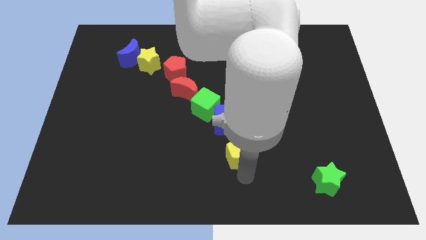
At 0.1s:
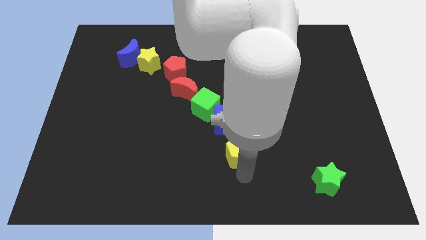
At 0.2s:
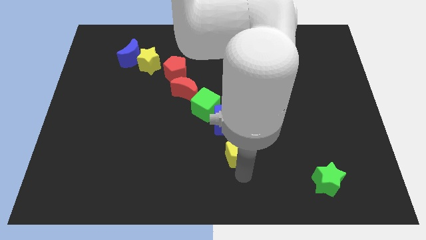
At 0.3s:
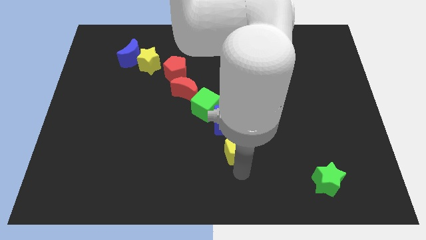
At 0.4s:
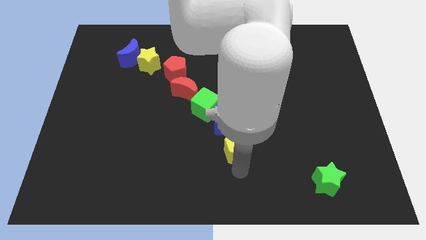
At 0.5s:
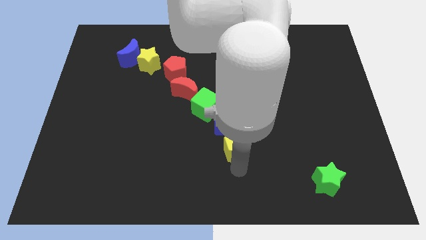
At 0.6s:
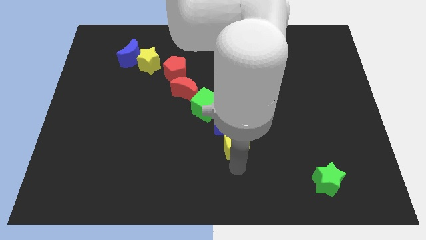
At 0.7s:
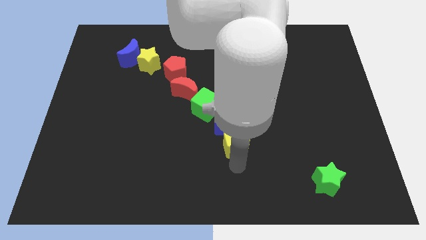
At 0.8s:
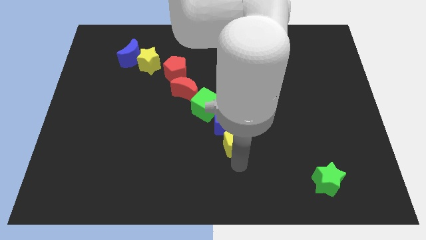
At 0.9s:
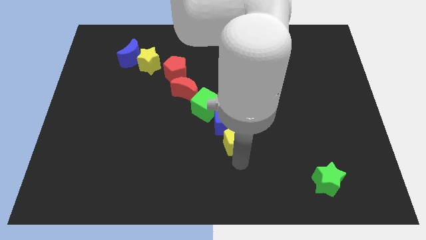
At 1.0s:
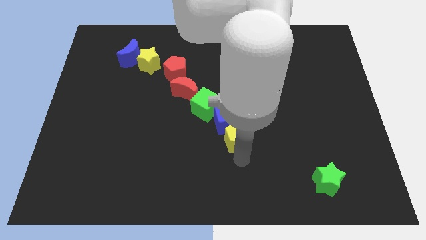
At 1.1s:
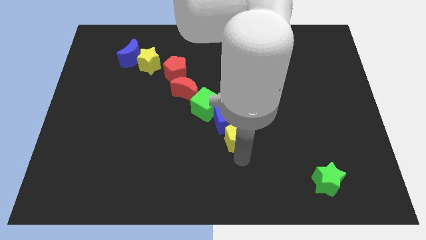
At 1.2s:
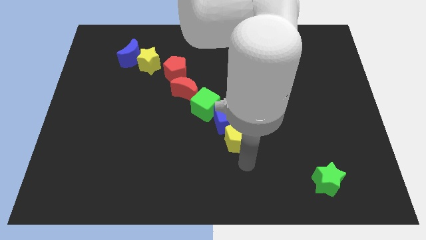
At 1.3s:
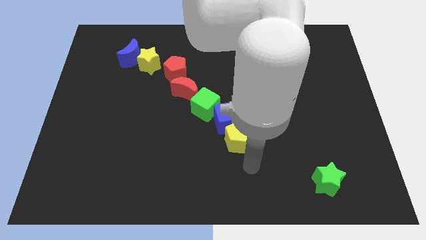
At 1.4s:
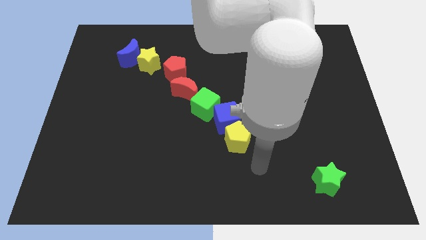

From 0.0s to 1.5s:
push the yellow pentagon into the blue cube

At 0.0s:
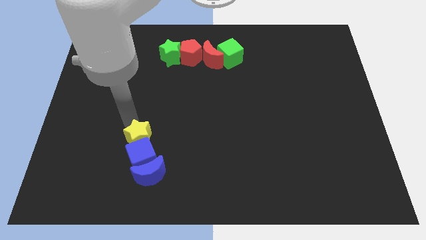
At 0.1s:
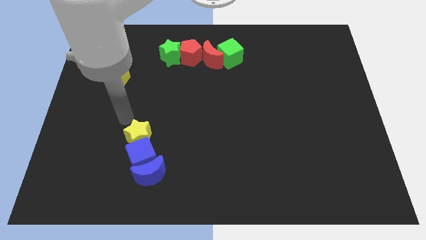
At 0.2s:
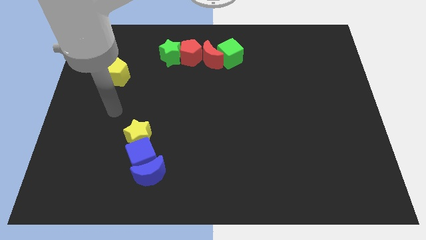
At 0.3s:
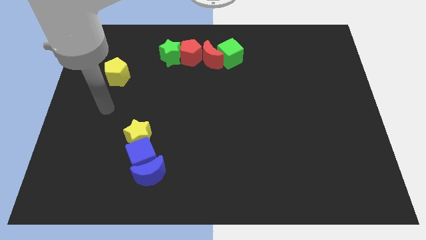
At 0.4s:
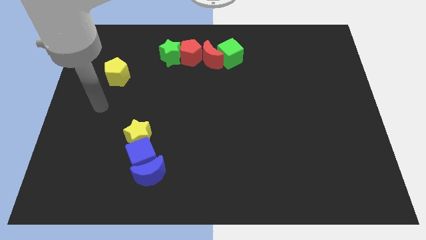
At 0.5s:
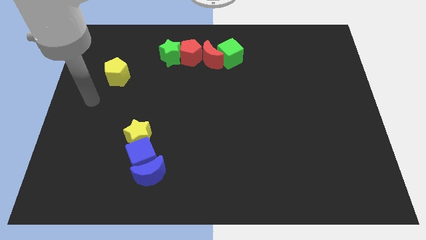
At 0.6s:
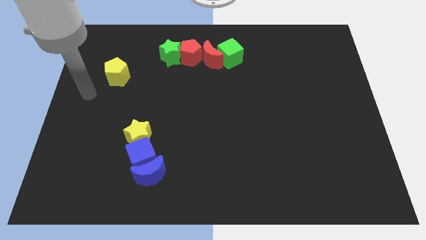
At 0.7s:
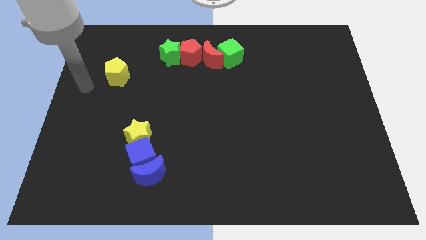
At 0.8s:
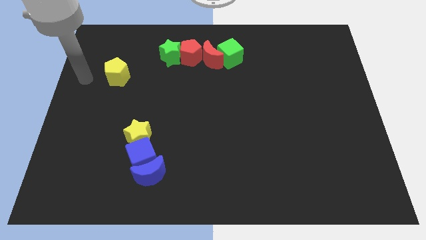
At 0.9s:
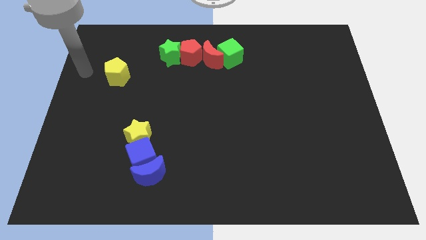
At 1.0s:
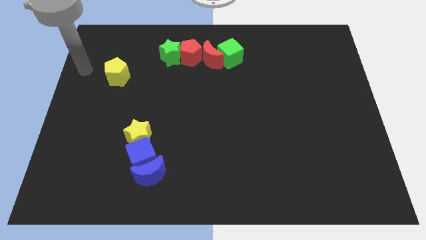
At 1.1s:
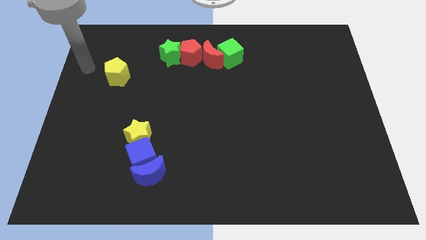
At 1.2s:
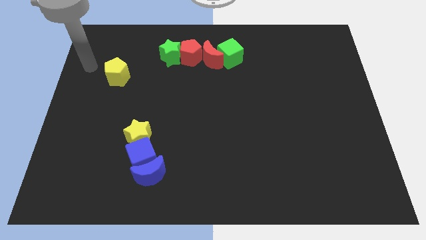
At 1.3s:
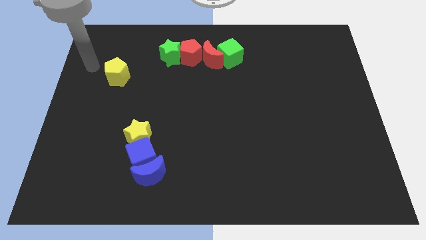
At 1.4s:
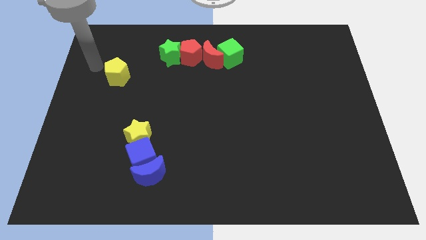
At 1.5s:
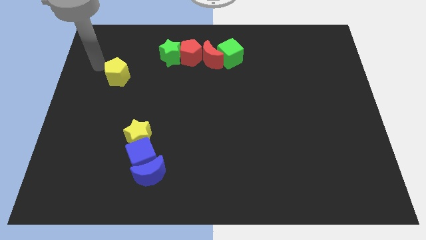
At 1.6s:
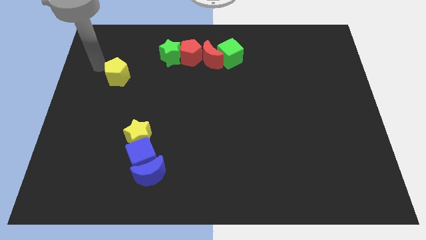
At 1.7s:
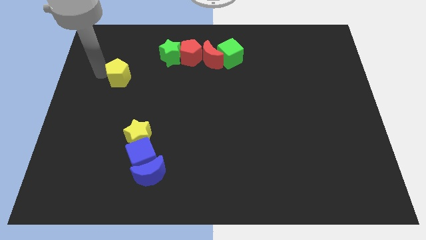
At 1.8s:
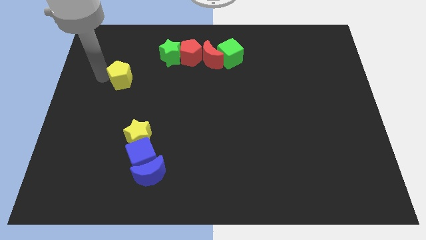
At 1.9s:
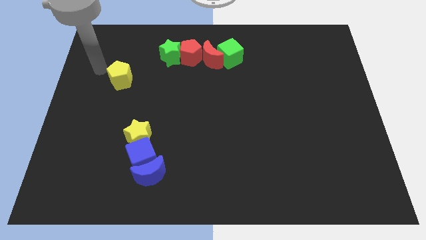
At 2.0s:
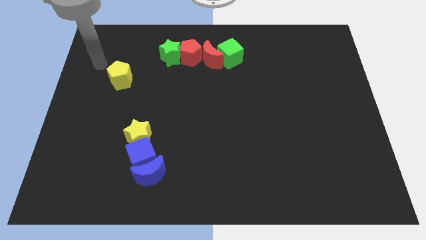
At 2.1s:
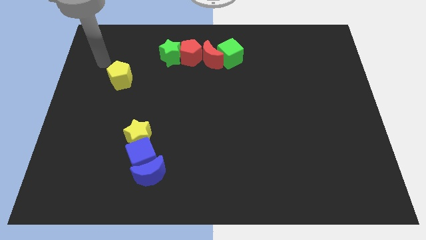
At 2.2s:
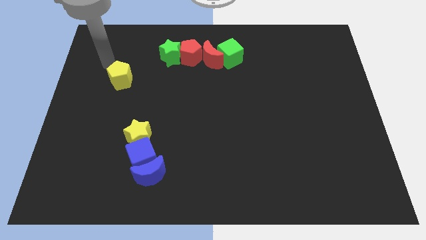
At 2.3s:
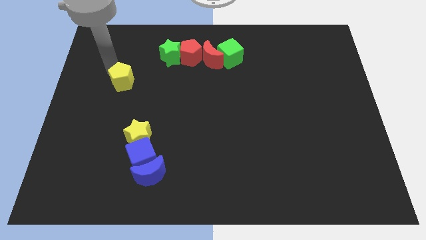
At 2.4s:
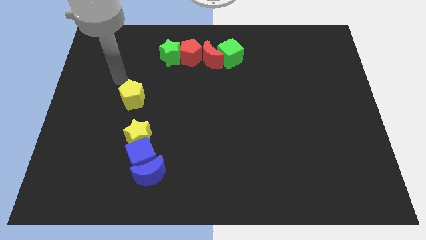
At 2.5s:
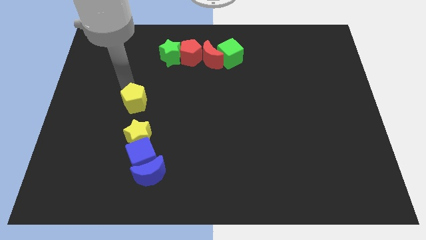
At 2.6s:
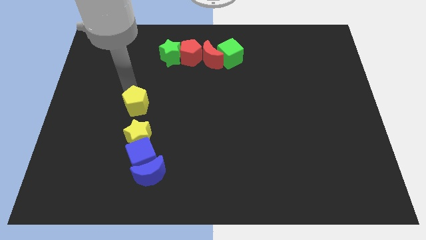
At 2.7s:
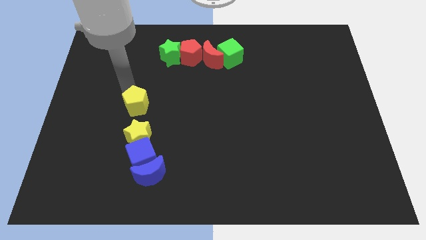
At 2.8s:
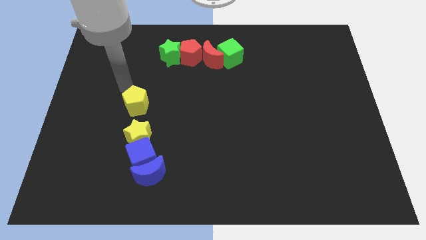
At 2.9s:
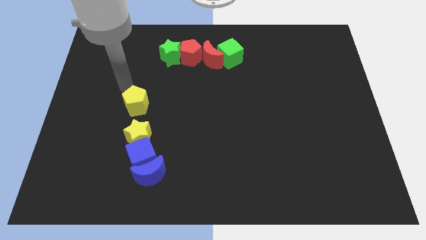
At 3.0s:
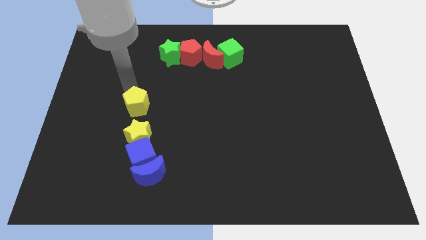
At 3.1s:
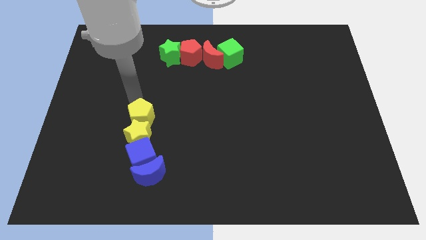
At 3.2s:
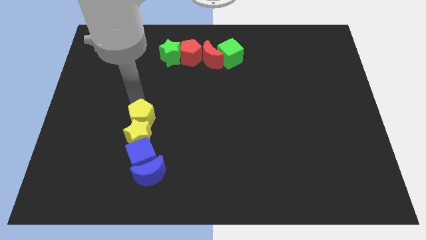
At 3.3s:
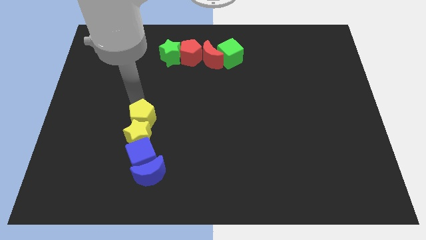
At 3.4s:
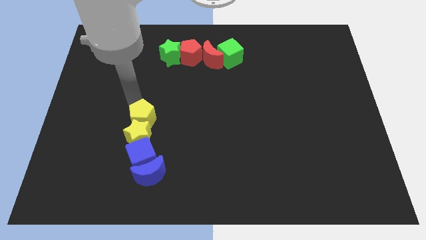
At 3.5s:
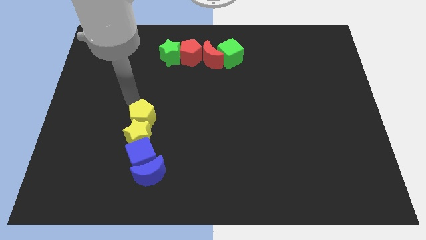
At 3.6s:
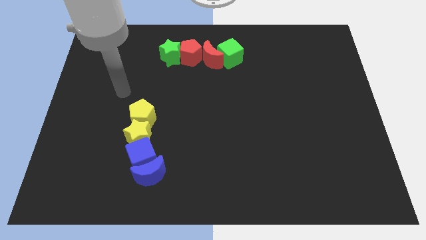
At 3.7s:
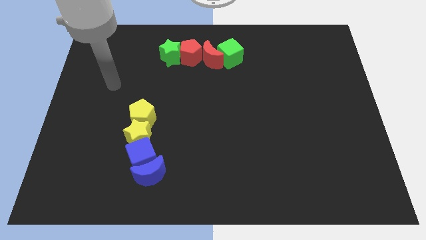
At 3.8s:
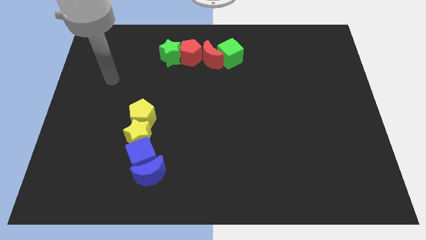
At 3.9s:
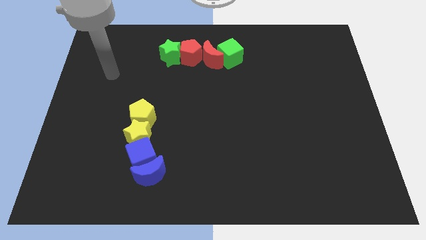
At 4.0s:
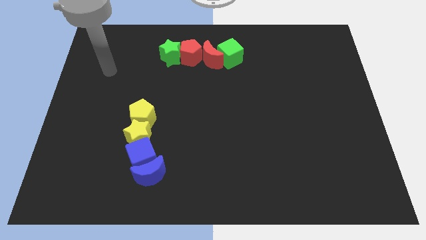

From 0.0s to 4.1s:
push the yellow pentagon to the top of the yellow star

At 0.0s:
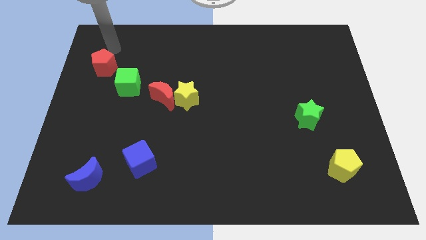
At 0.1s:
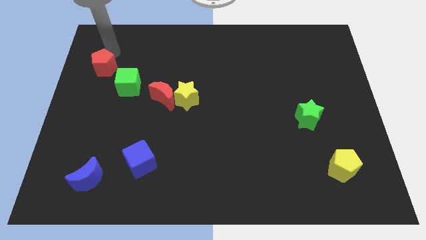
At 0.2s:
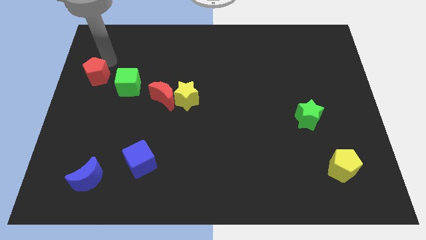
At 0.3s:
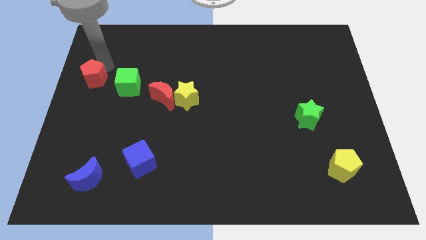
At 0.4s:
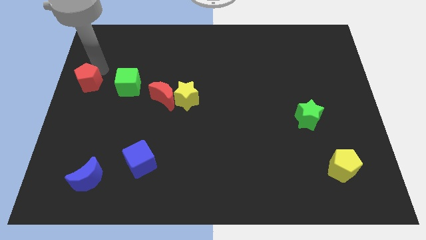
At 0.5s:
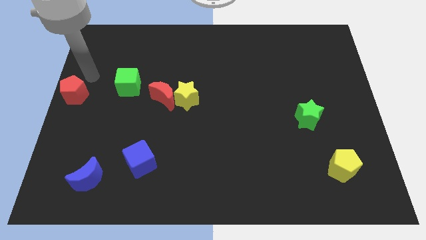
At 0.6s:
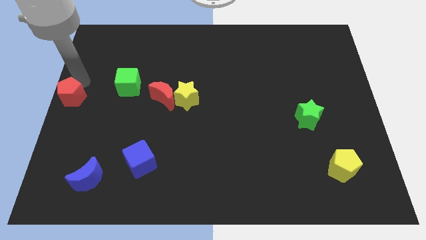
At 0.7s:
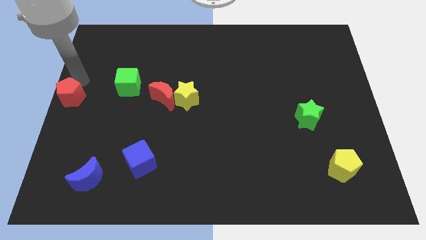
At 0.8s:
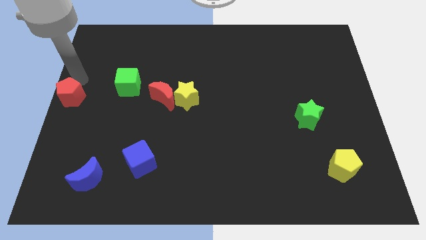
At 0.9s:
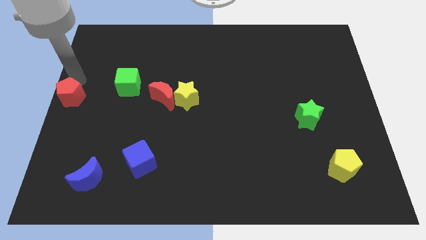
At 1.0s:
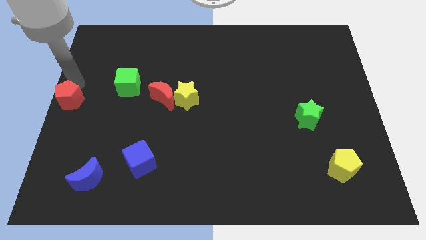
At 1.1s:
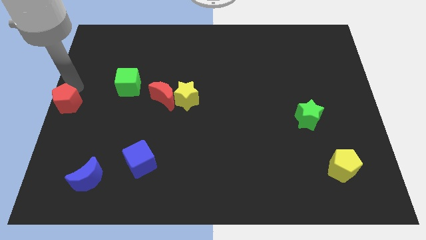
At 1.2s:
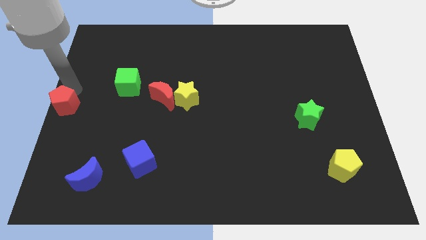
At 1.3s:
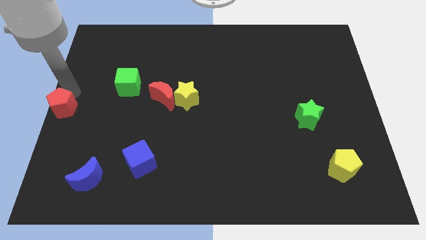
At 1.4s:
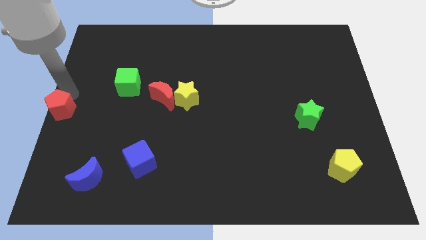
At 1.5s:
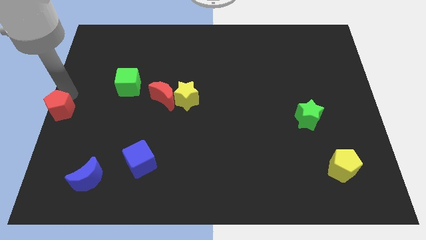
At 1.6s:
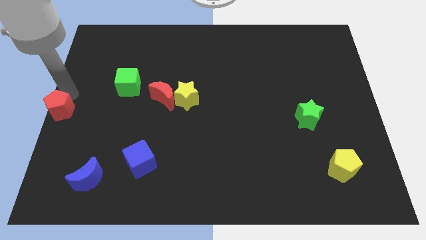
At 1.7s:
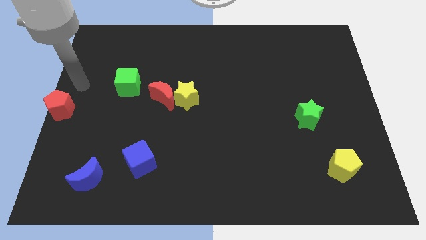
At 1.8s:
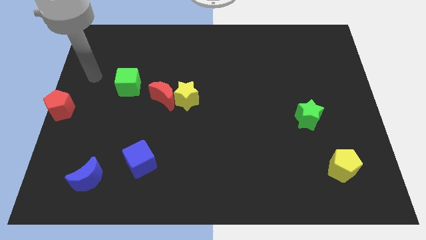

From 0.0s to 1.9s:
move the red pentagon to left center of board

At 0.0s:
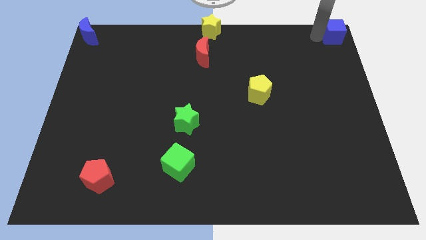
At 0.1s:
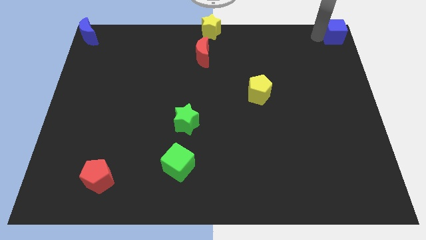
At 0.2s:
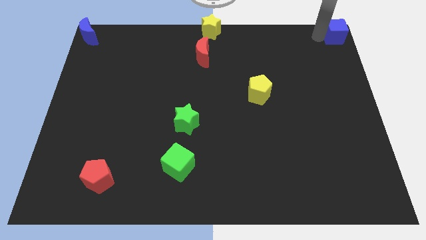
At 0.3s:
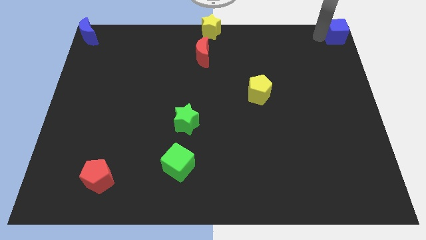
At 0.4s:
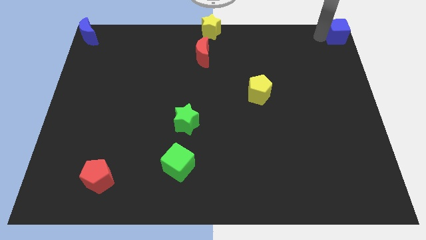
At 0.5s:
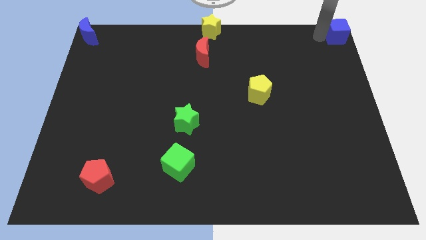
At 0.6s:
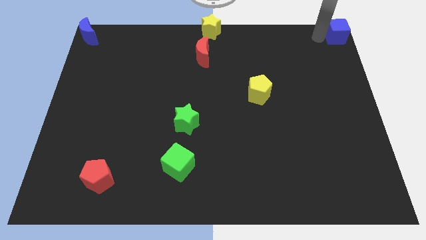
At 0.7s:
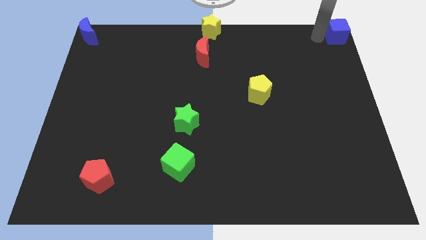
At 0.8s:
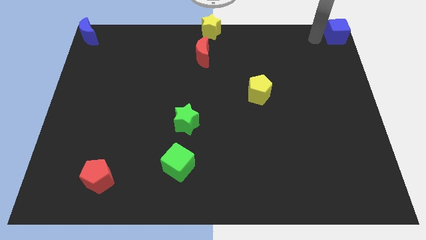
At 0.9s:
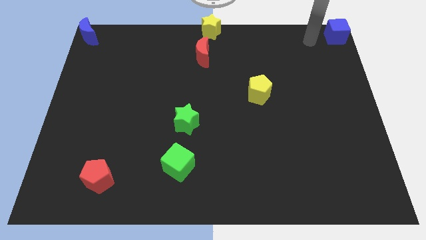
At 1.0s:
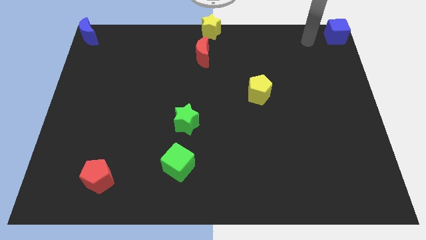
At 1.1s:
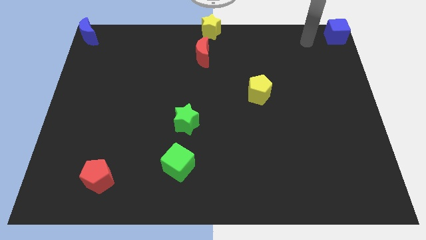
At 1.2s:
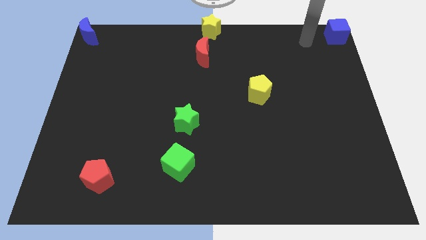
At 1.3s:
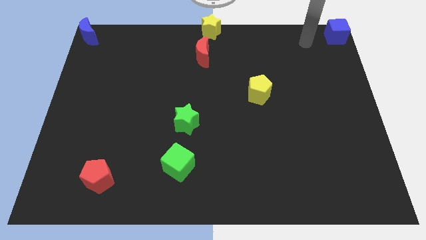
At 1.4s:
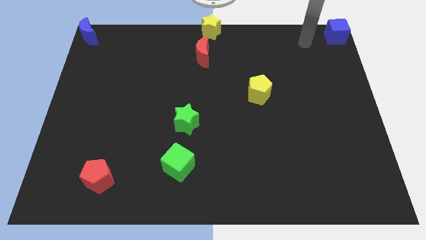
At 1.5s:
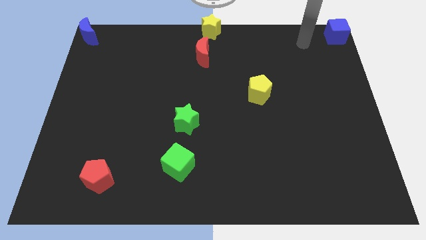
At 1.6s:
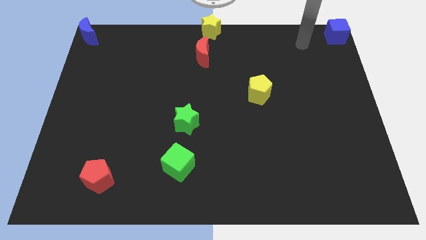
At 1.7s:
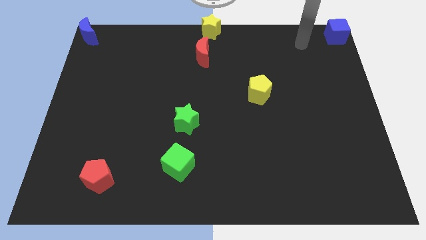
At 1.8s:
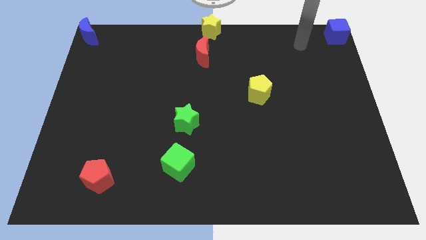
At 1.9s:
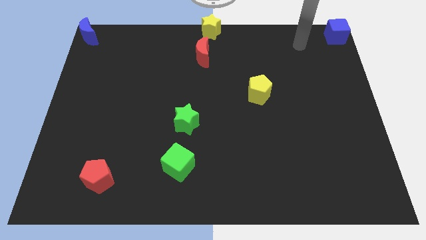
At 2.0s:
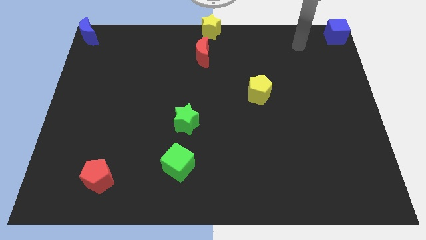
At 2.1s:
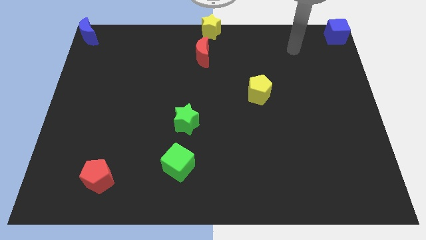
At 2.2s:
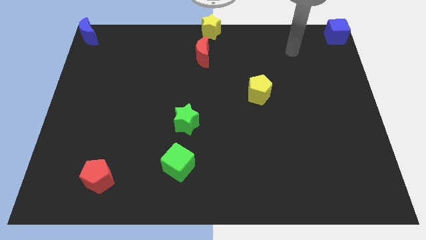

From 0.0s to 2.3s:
move the arm away from the blue cube
